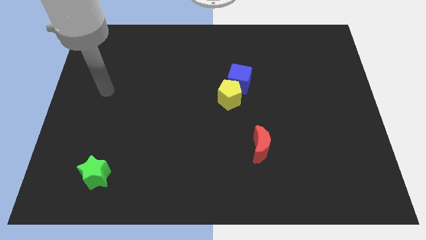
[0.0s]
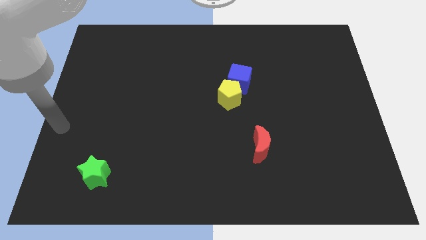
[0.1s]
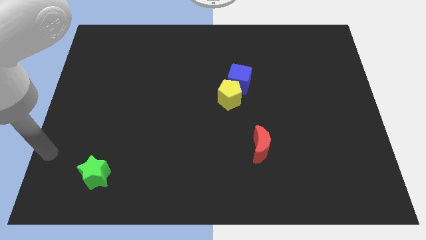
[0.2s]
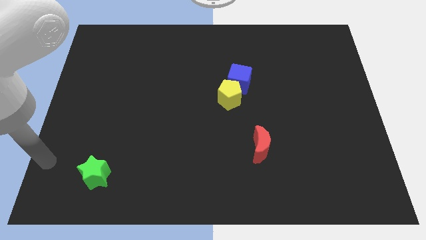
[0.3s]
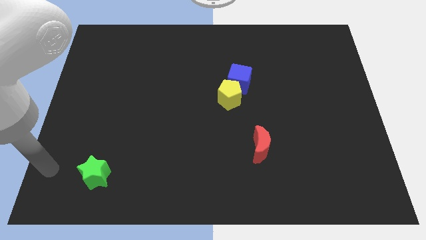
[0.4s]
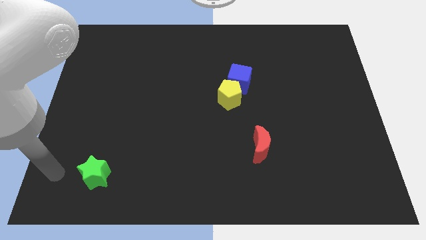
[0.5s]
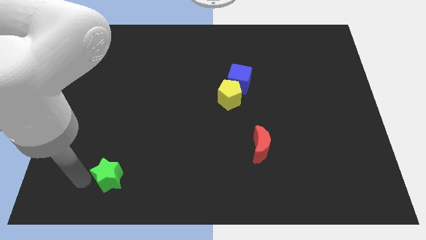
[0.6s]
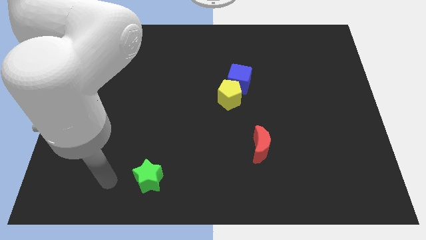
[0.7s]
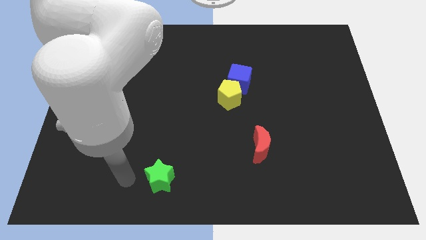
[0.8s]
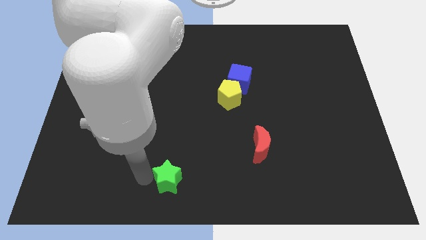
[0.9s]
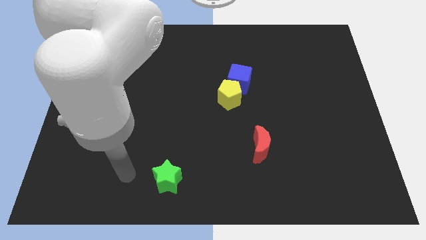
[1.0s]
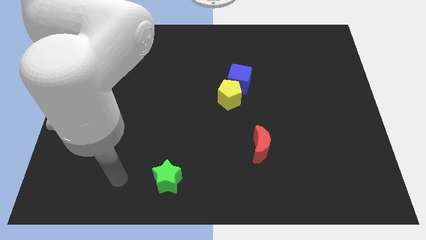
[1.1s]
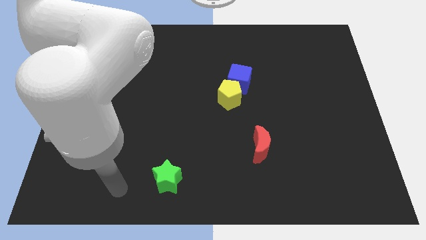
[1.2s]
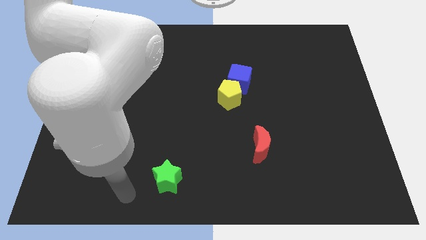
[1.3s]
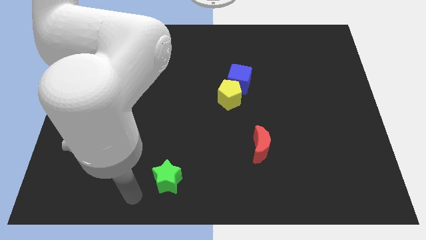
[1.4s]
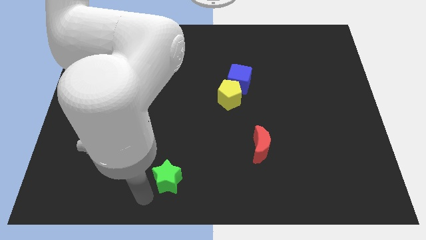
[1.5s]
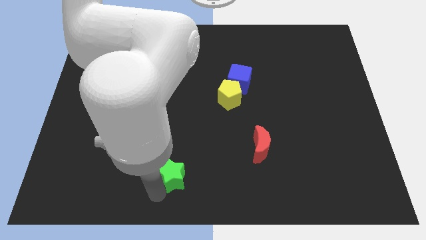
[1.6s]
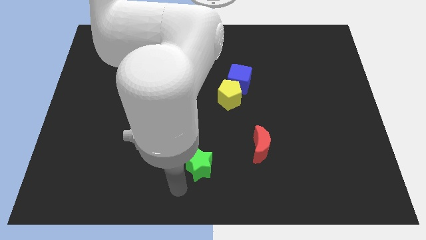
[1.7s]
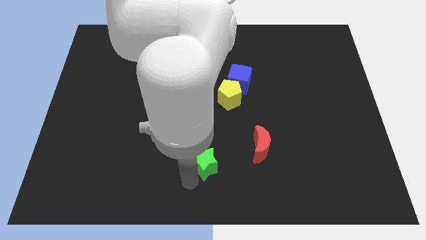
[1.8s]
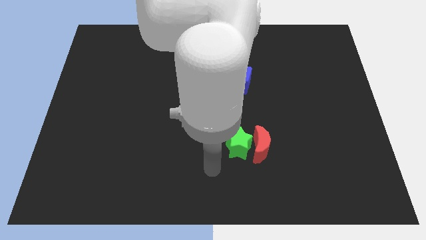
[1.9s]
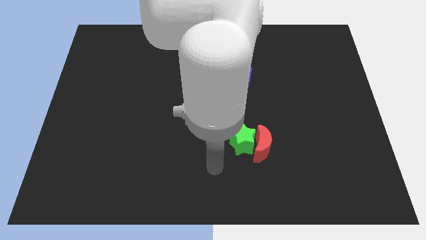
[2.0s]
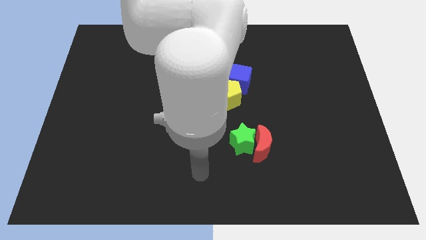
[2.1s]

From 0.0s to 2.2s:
push the star close to the red block

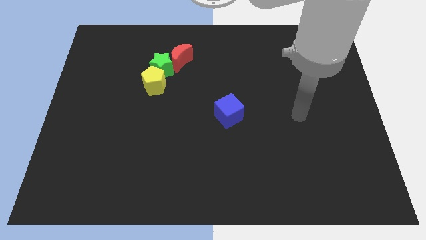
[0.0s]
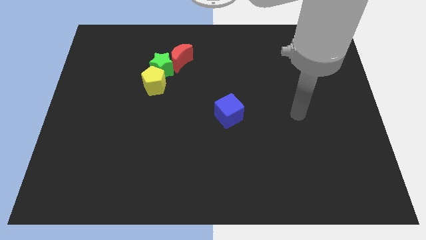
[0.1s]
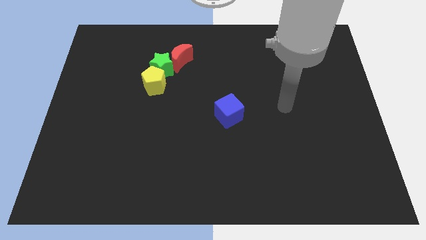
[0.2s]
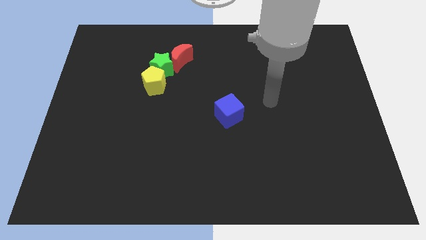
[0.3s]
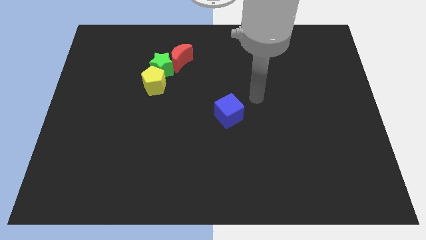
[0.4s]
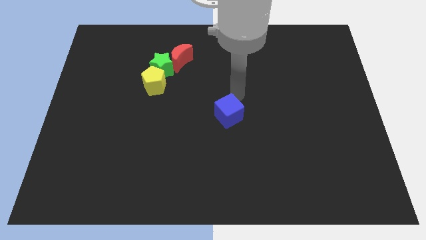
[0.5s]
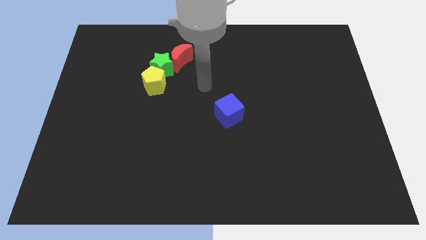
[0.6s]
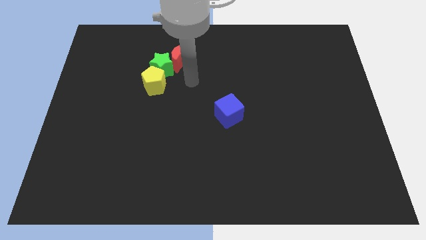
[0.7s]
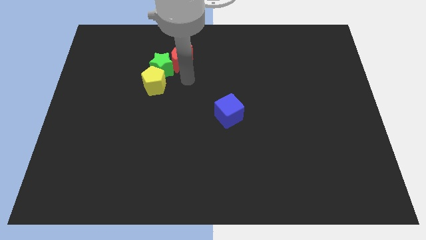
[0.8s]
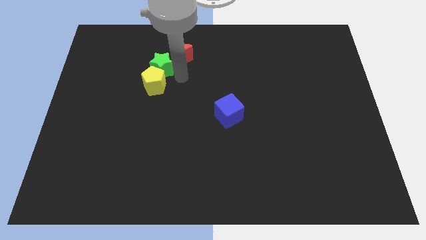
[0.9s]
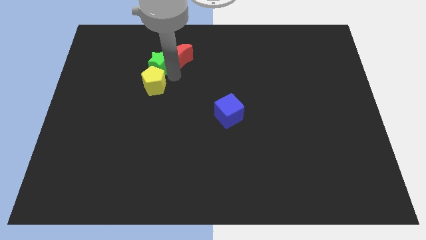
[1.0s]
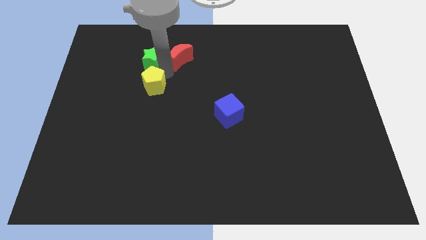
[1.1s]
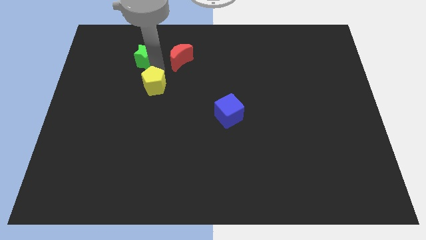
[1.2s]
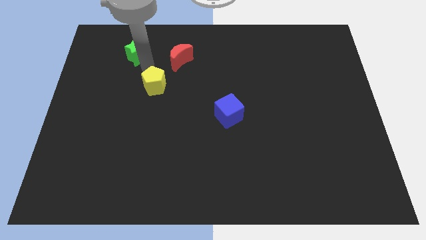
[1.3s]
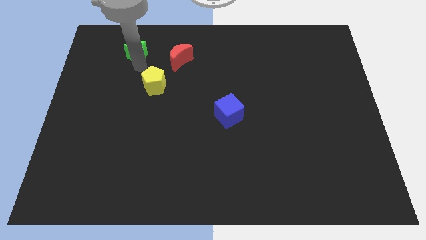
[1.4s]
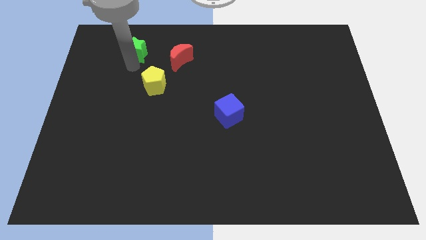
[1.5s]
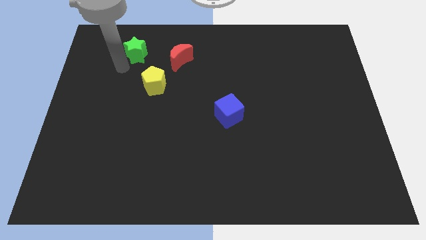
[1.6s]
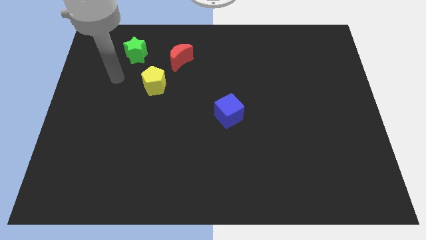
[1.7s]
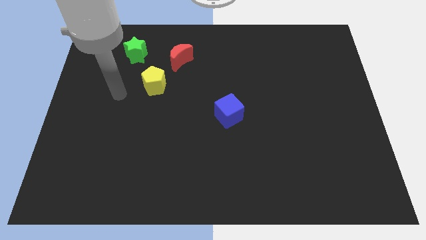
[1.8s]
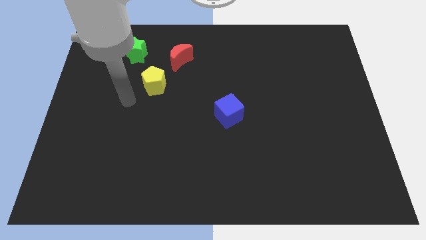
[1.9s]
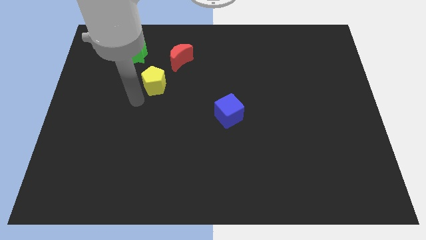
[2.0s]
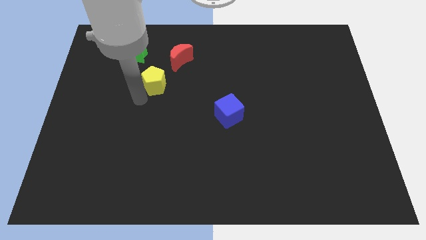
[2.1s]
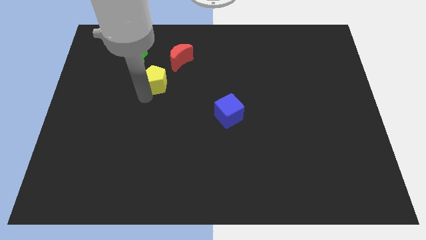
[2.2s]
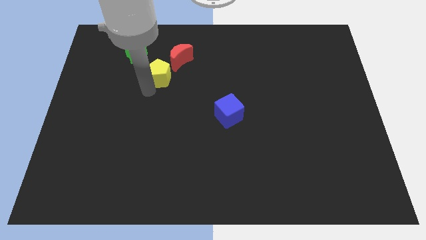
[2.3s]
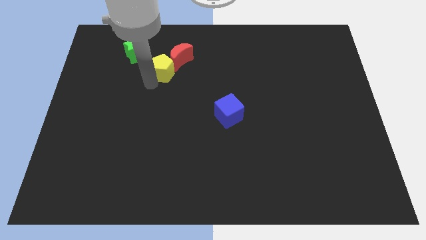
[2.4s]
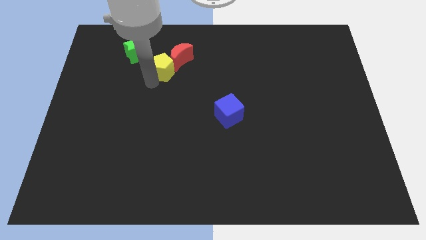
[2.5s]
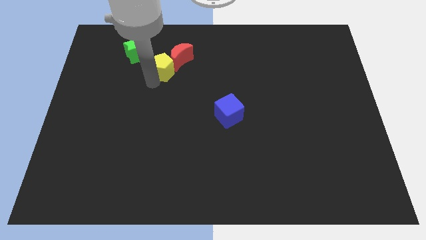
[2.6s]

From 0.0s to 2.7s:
push the yellow block towards the red moon

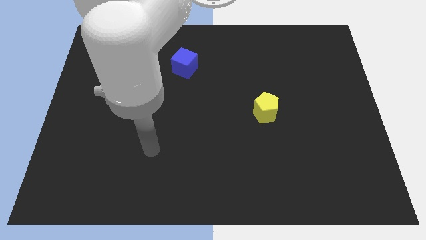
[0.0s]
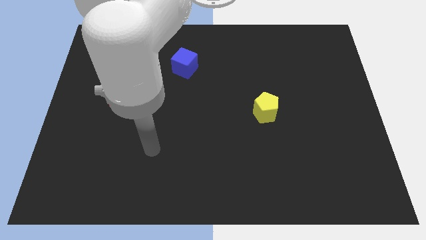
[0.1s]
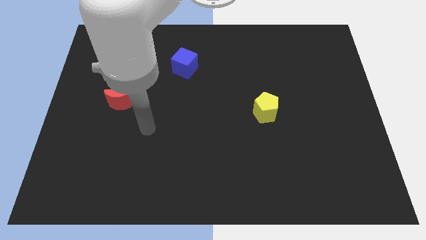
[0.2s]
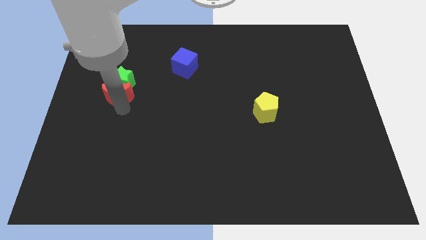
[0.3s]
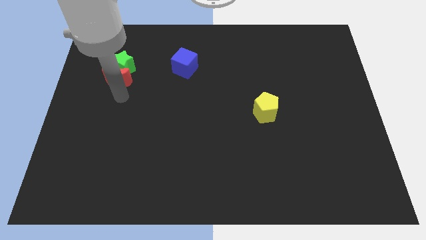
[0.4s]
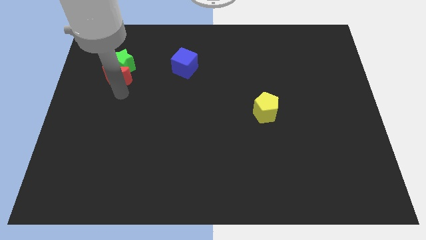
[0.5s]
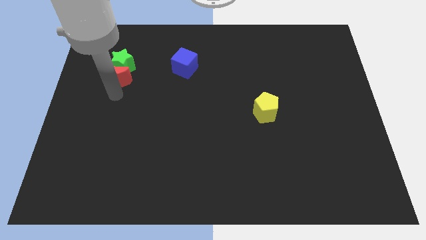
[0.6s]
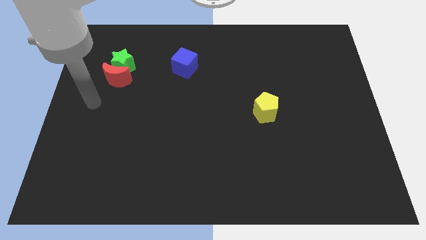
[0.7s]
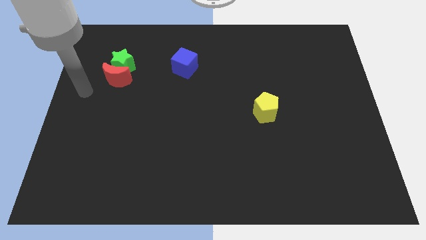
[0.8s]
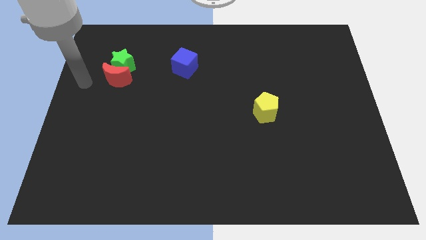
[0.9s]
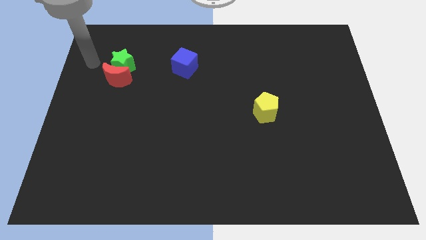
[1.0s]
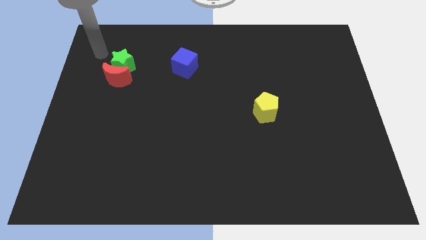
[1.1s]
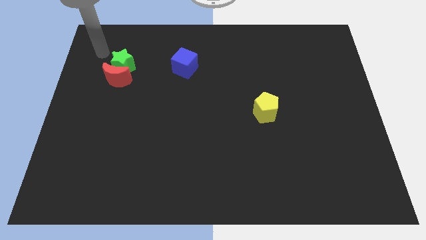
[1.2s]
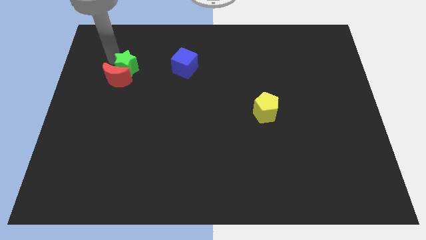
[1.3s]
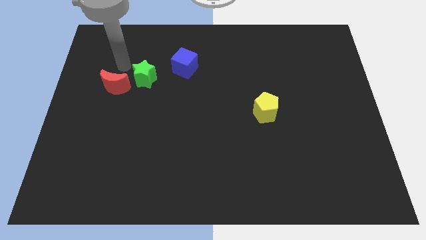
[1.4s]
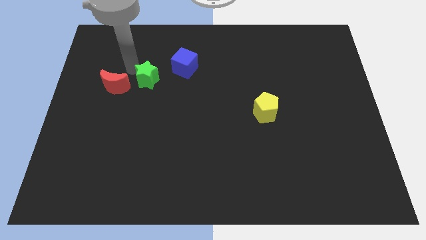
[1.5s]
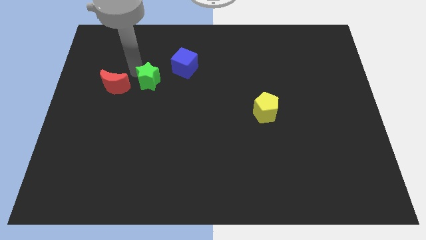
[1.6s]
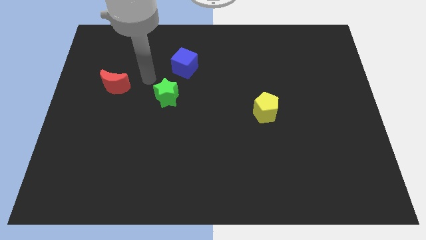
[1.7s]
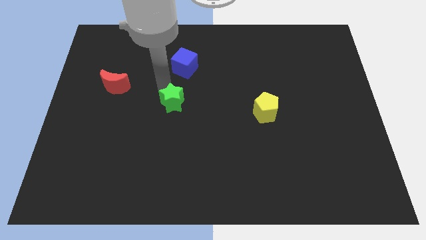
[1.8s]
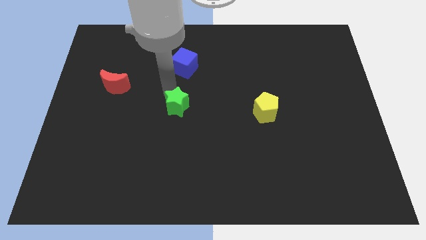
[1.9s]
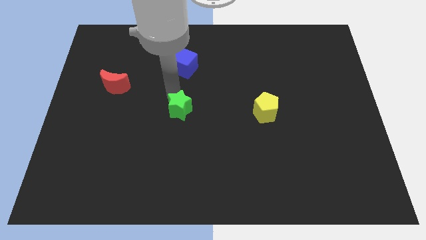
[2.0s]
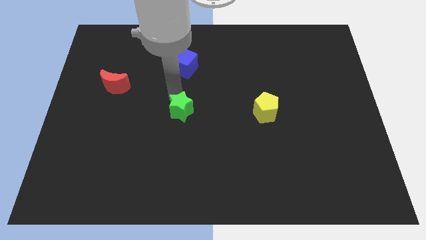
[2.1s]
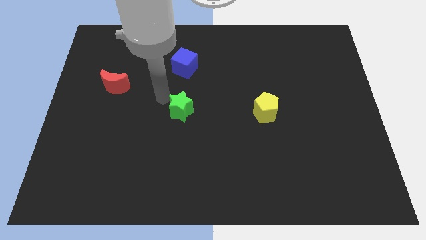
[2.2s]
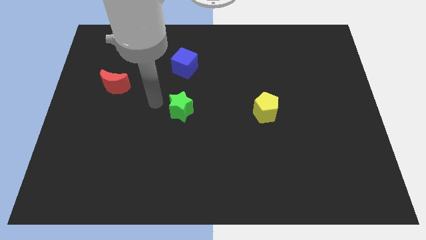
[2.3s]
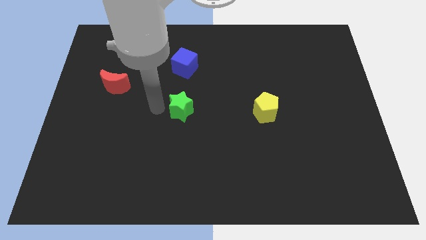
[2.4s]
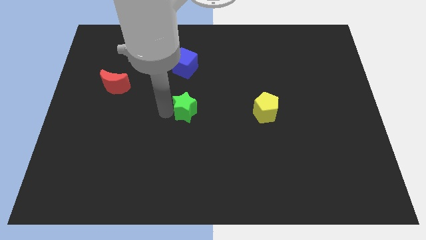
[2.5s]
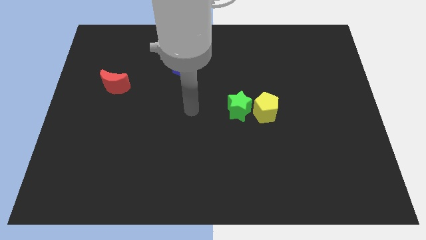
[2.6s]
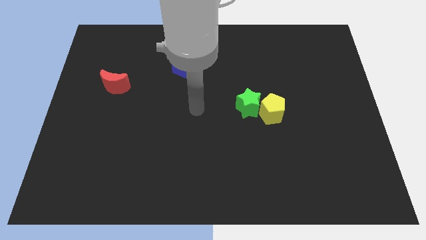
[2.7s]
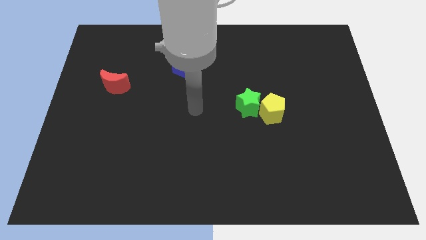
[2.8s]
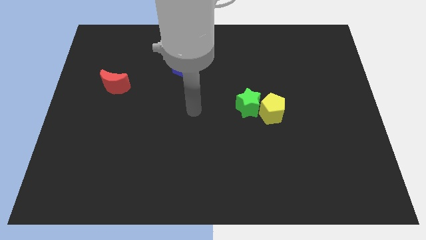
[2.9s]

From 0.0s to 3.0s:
push the green block towards the yellow pentagon

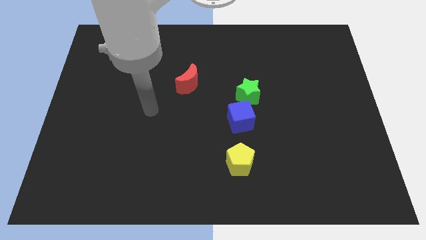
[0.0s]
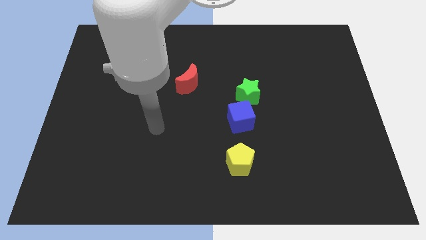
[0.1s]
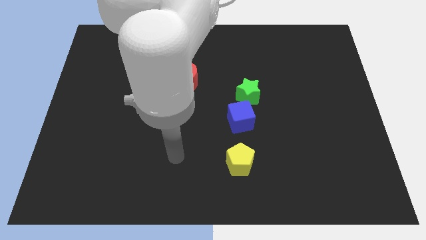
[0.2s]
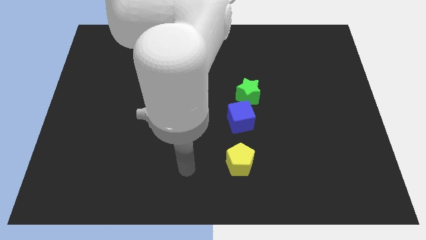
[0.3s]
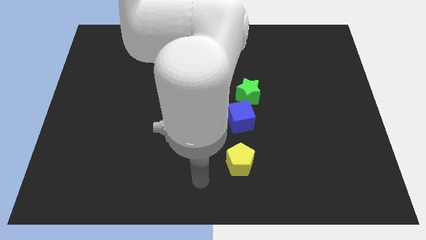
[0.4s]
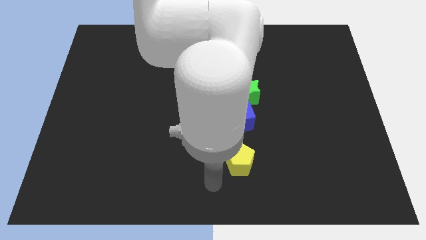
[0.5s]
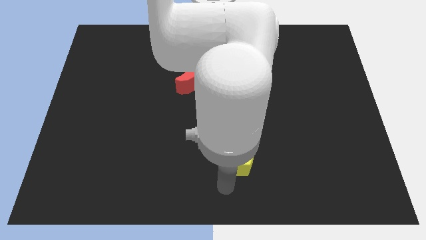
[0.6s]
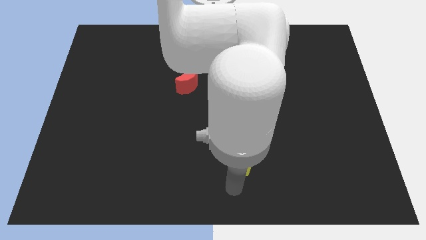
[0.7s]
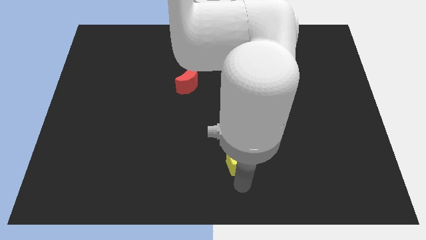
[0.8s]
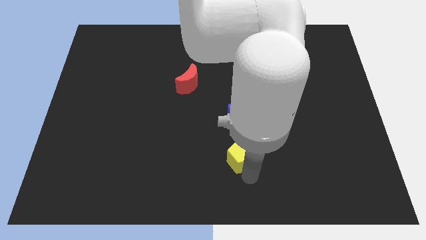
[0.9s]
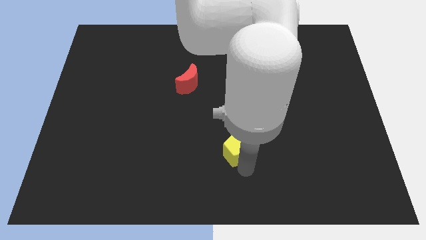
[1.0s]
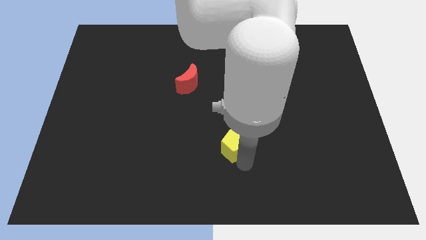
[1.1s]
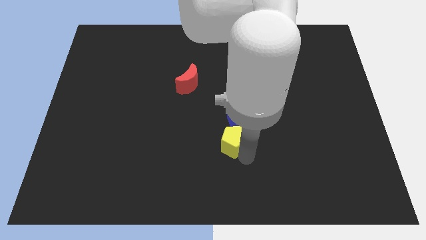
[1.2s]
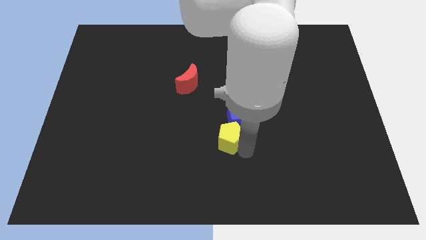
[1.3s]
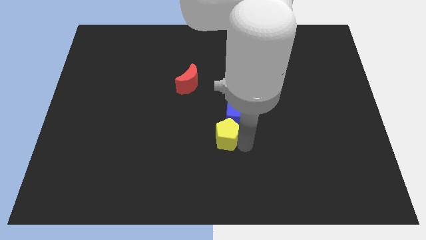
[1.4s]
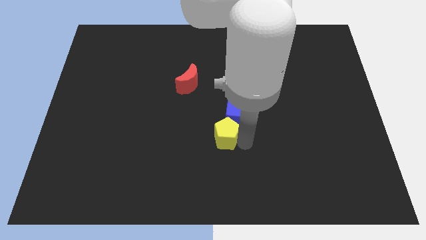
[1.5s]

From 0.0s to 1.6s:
move the pentagon towards the blue cube
